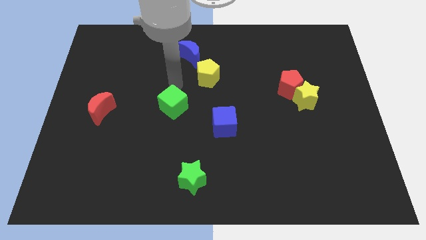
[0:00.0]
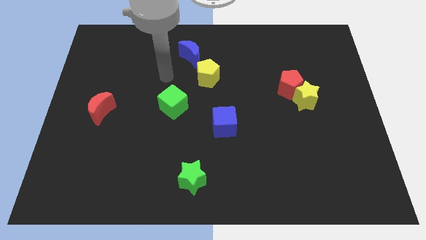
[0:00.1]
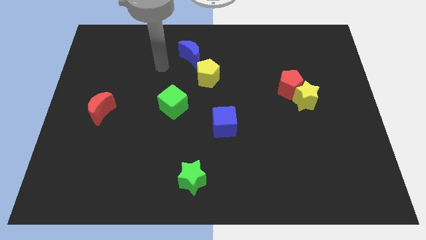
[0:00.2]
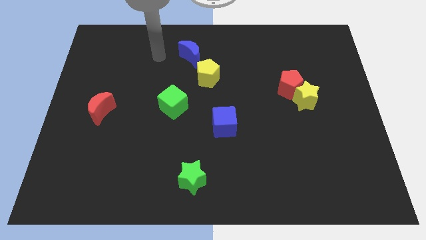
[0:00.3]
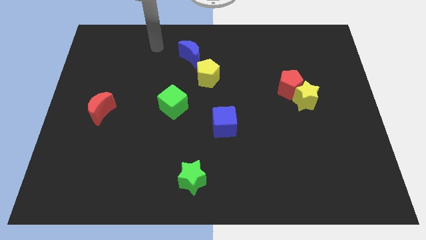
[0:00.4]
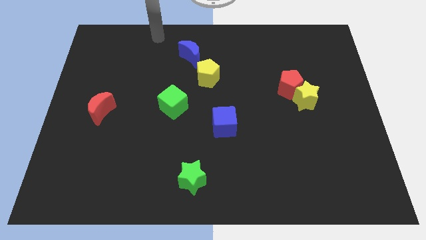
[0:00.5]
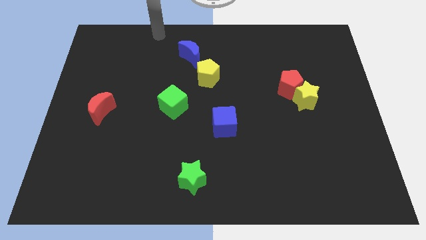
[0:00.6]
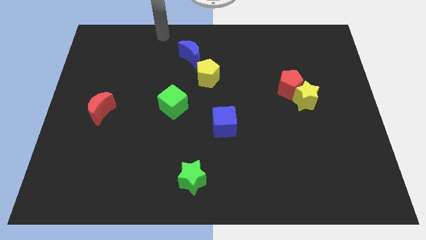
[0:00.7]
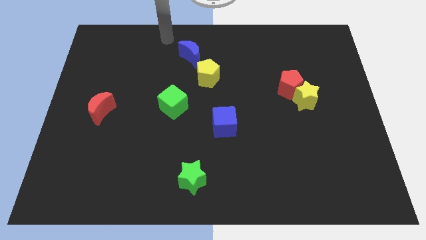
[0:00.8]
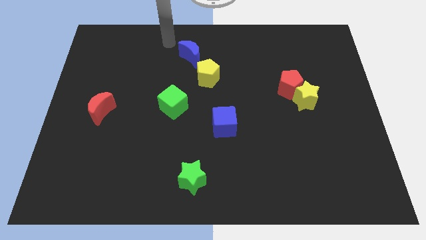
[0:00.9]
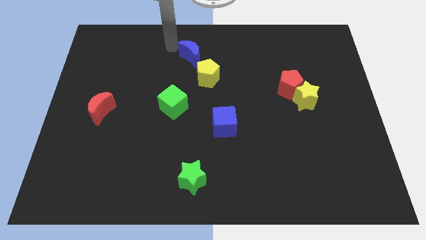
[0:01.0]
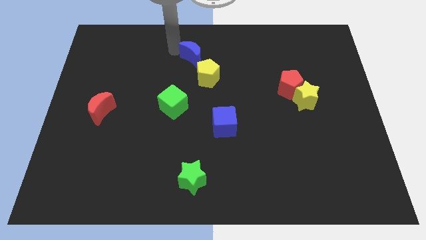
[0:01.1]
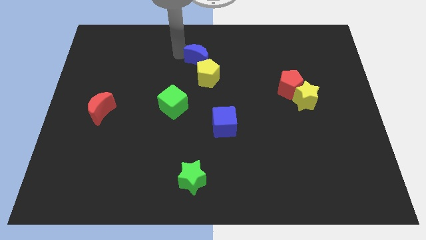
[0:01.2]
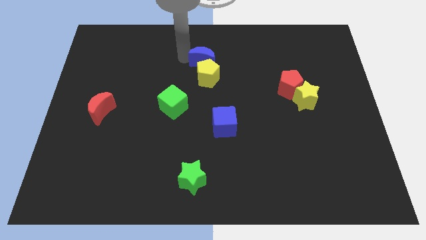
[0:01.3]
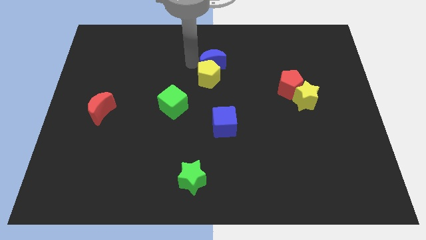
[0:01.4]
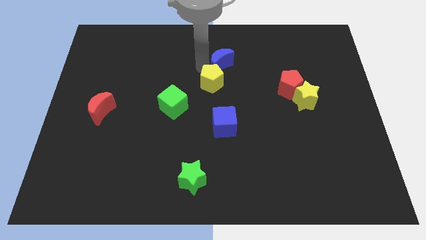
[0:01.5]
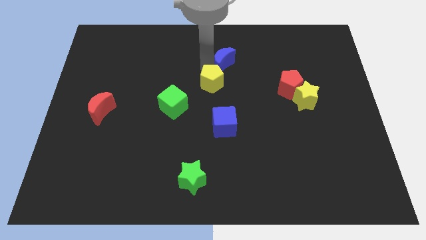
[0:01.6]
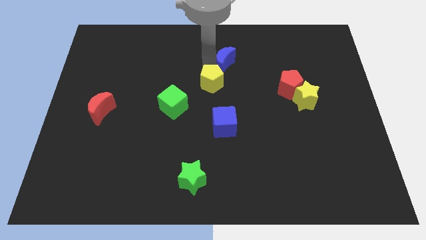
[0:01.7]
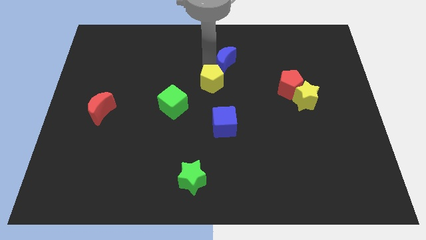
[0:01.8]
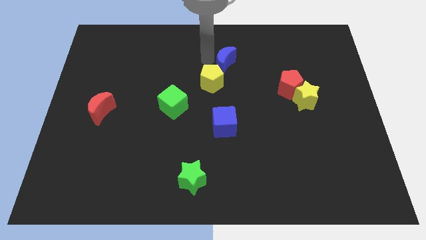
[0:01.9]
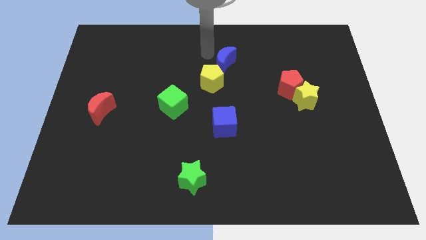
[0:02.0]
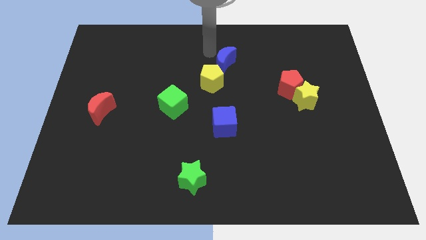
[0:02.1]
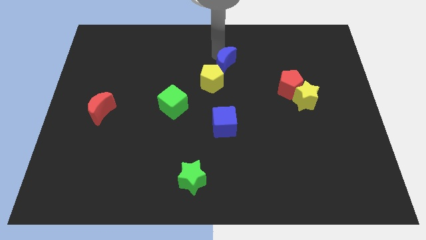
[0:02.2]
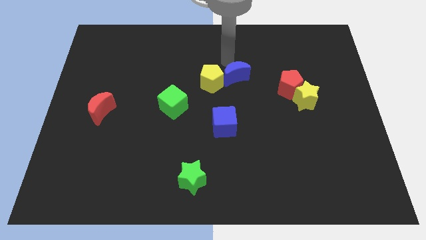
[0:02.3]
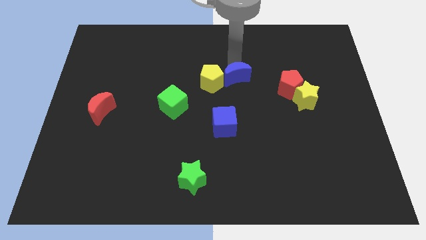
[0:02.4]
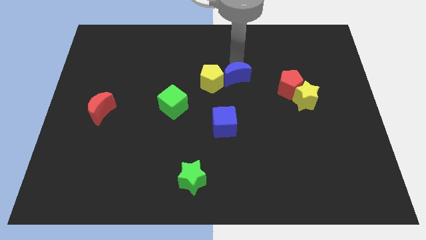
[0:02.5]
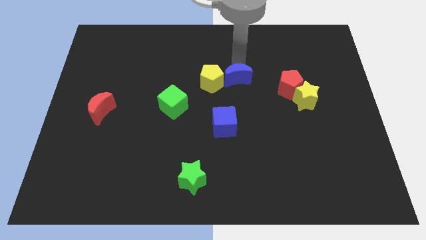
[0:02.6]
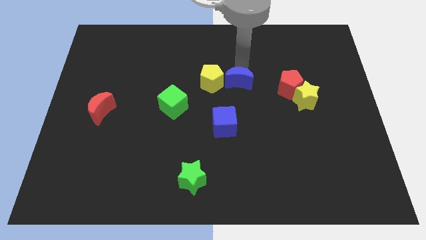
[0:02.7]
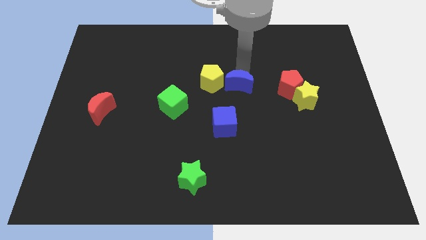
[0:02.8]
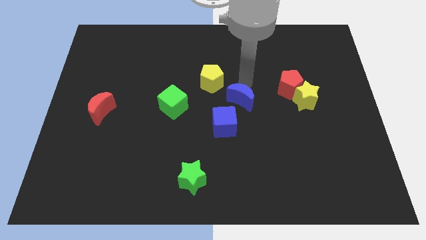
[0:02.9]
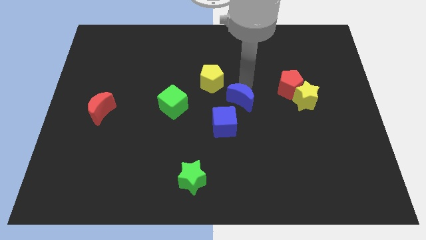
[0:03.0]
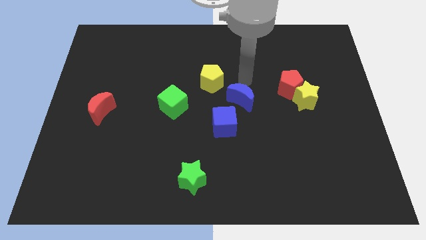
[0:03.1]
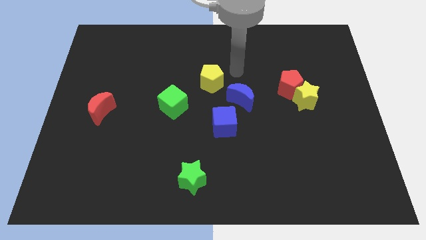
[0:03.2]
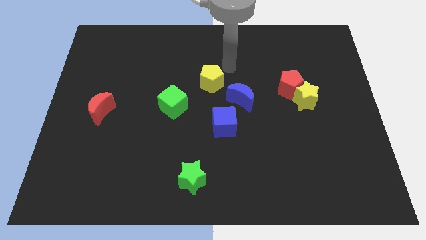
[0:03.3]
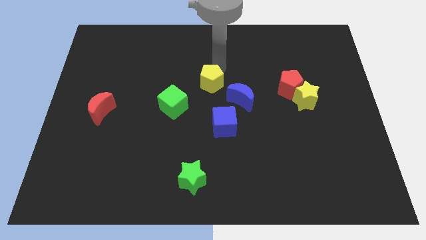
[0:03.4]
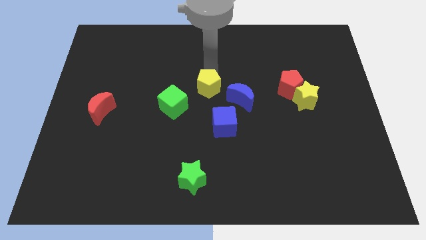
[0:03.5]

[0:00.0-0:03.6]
push the blue crescent to the bottom right of the yellow pentagon

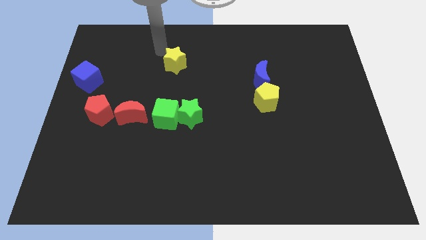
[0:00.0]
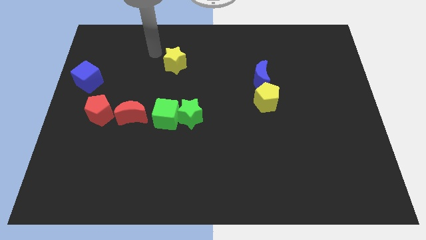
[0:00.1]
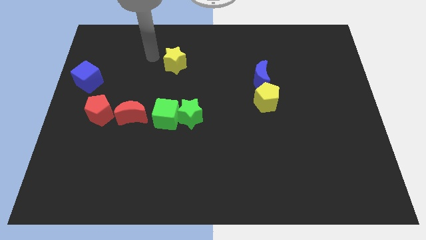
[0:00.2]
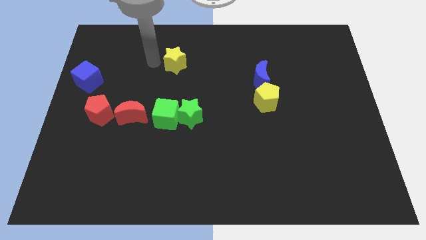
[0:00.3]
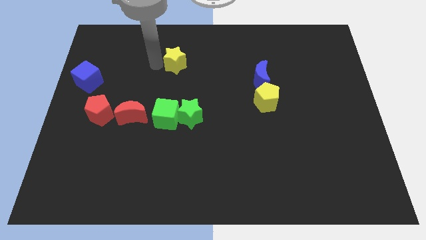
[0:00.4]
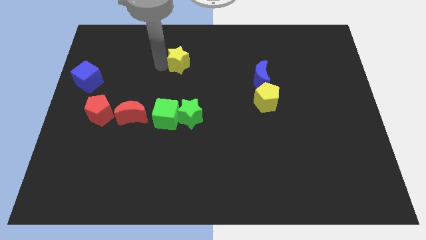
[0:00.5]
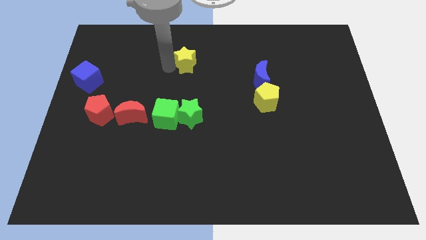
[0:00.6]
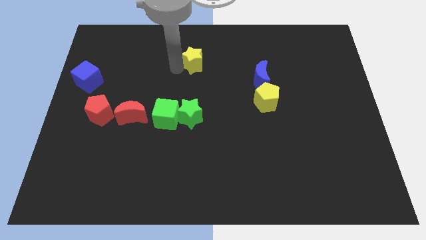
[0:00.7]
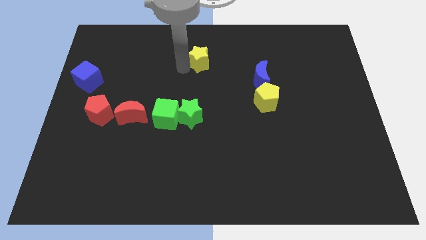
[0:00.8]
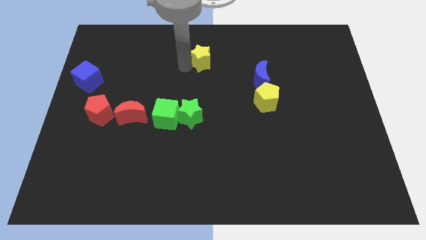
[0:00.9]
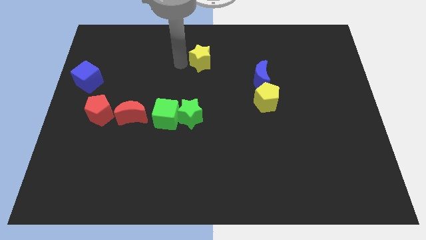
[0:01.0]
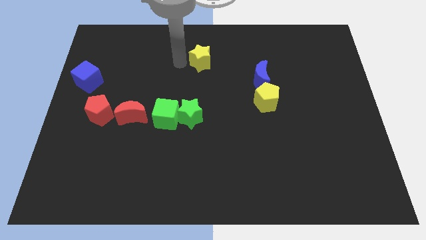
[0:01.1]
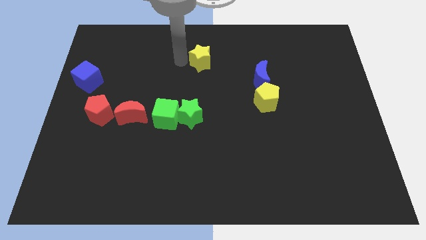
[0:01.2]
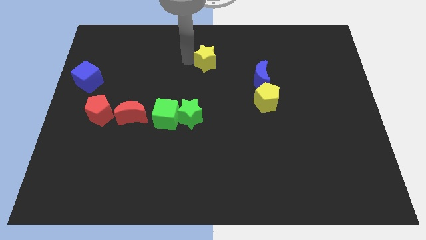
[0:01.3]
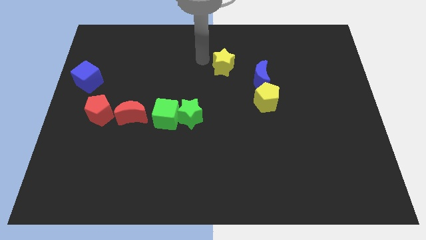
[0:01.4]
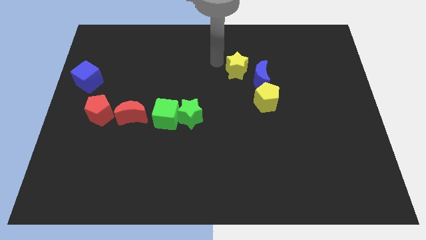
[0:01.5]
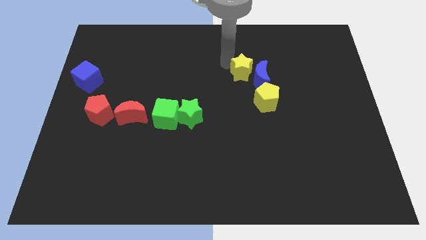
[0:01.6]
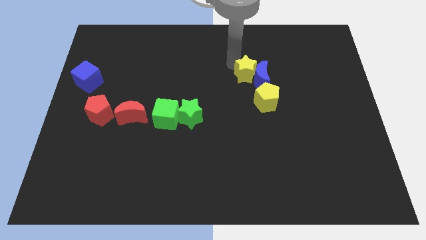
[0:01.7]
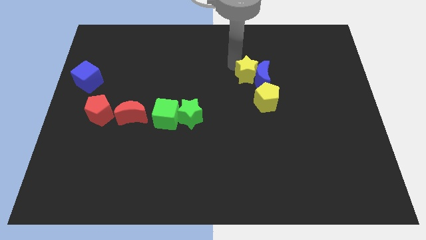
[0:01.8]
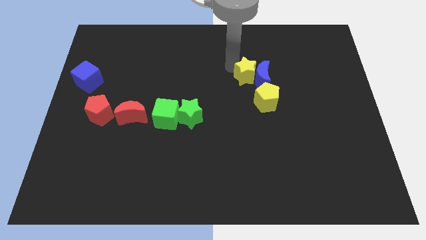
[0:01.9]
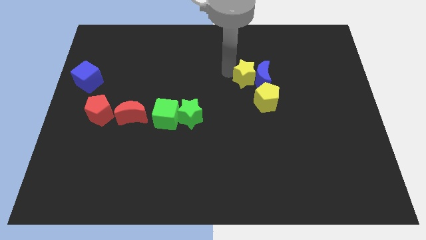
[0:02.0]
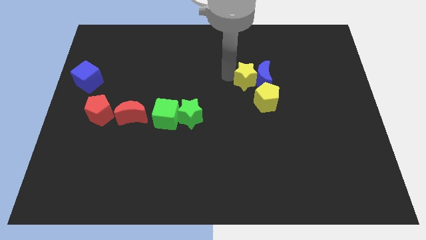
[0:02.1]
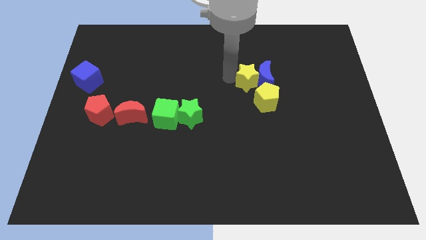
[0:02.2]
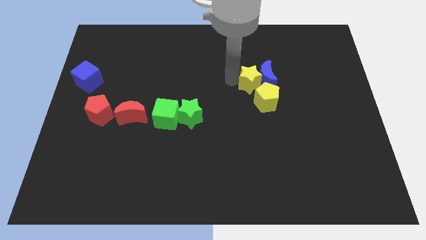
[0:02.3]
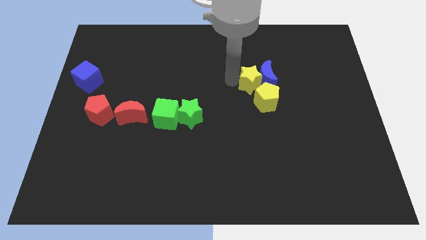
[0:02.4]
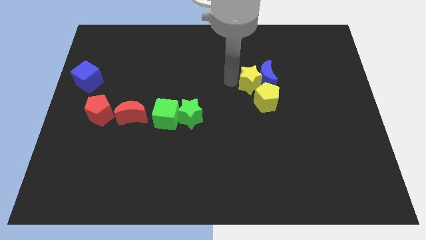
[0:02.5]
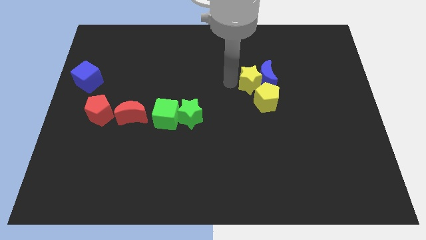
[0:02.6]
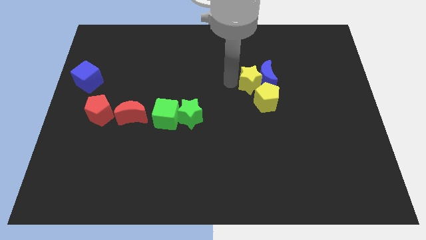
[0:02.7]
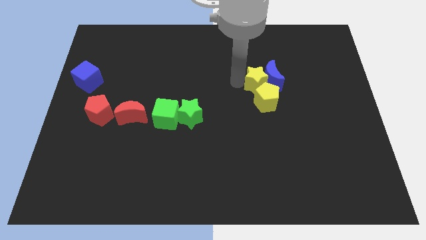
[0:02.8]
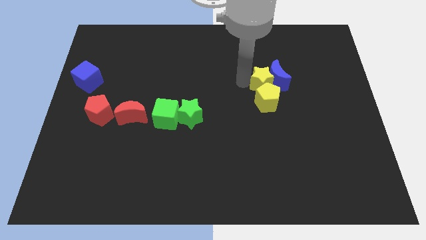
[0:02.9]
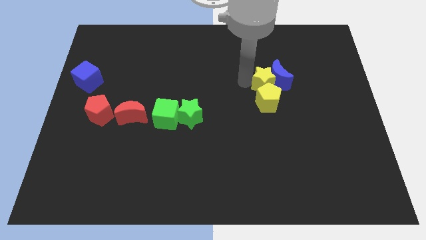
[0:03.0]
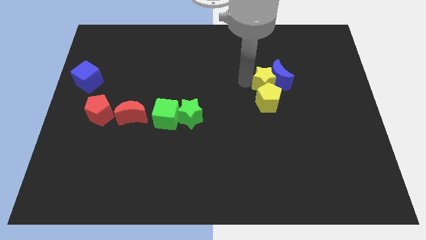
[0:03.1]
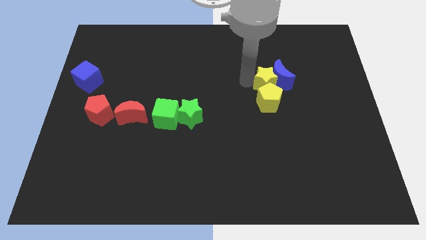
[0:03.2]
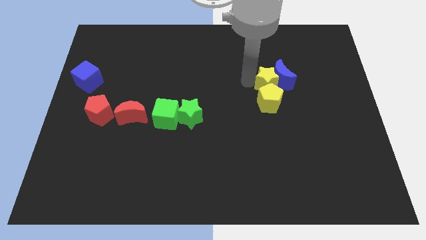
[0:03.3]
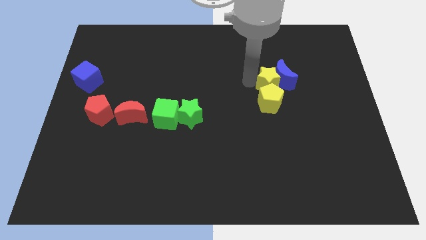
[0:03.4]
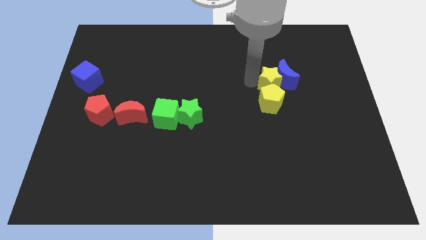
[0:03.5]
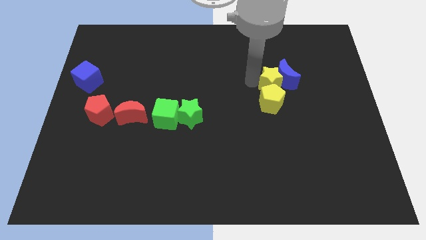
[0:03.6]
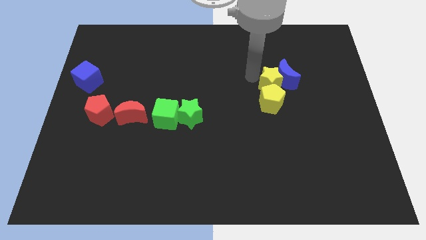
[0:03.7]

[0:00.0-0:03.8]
push the yellow star into the blue crescent

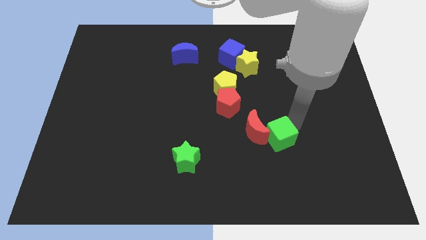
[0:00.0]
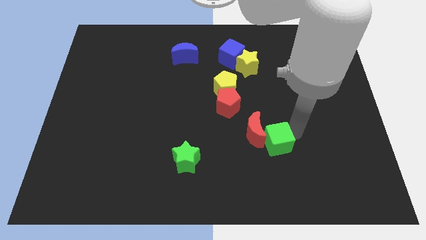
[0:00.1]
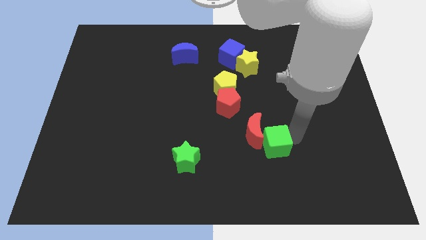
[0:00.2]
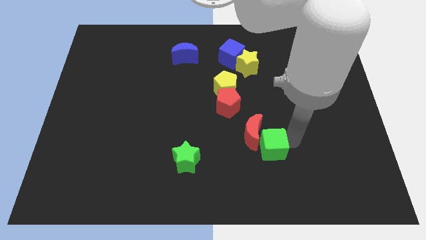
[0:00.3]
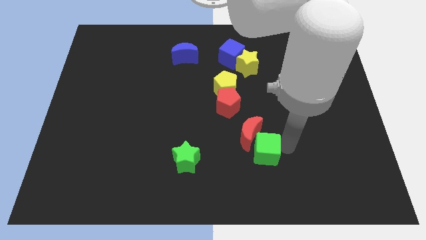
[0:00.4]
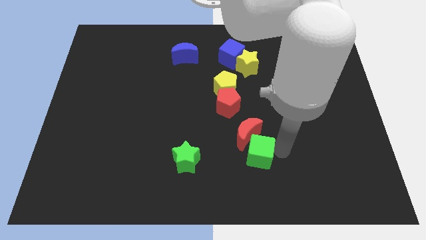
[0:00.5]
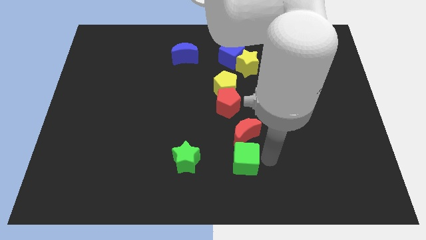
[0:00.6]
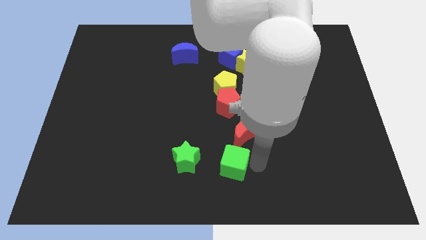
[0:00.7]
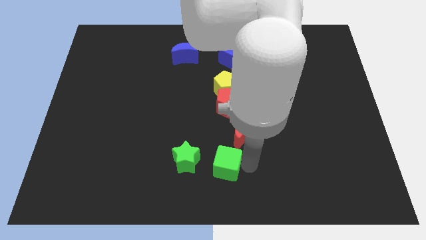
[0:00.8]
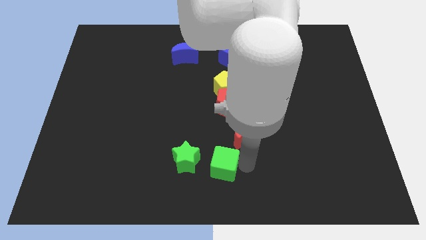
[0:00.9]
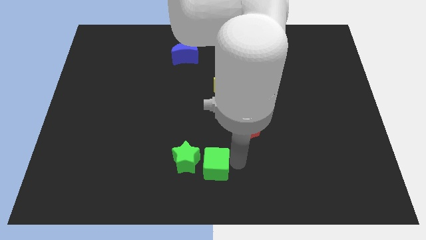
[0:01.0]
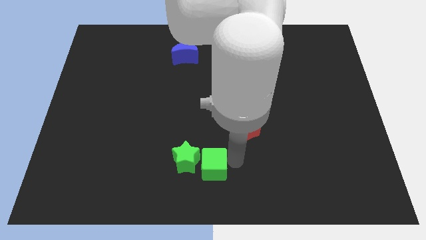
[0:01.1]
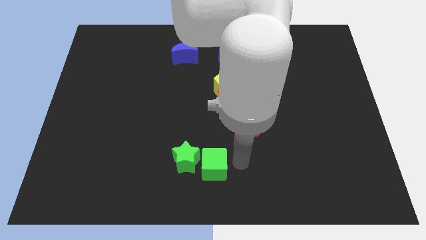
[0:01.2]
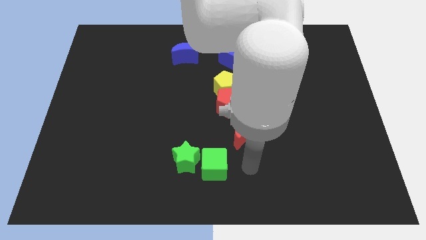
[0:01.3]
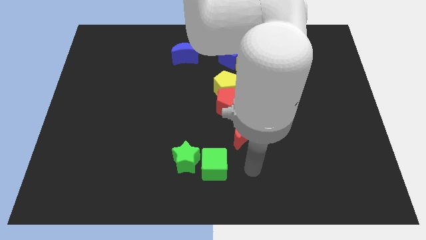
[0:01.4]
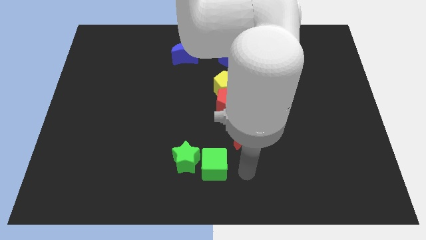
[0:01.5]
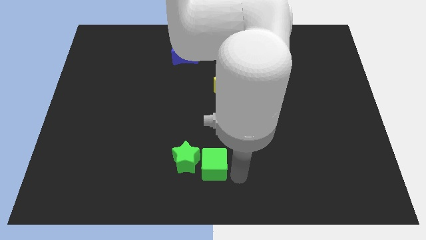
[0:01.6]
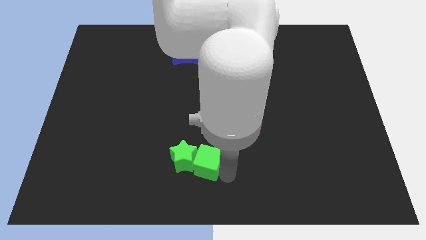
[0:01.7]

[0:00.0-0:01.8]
slide the green cube into the green star
